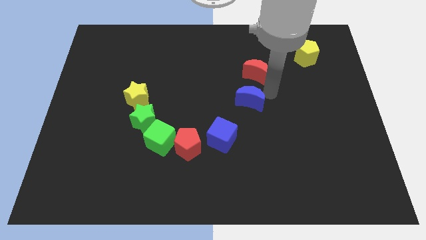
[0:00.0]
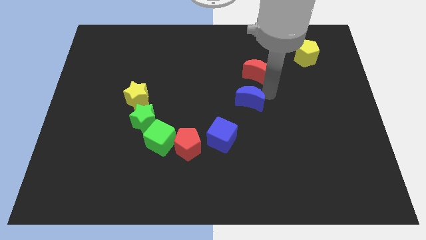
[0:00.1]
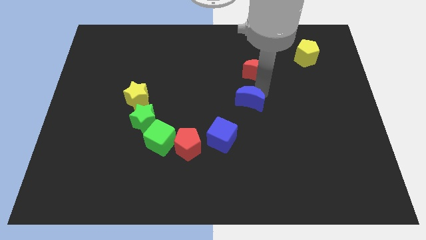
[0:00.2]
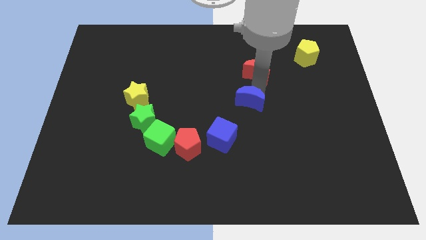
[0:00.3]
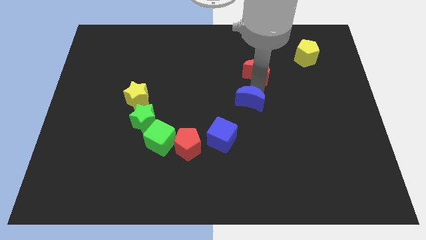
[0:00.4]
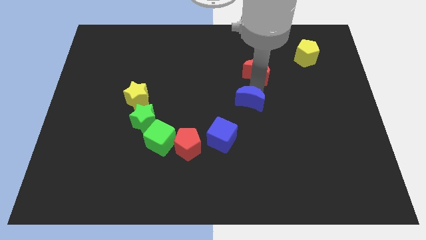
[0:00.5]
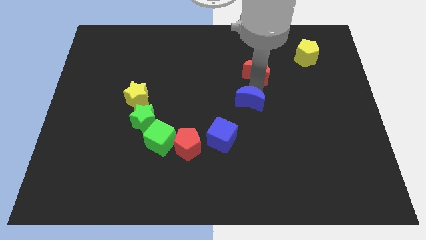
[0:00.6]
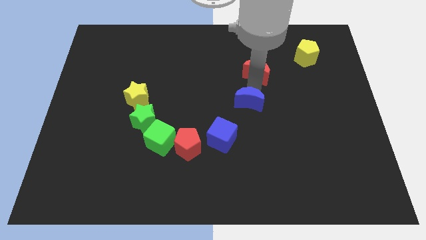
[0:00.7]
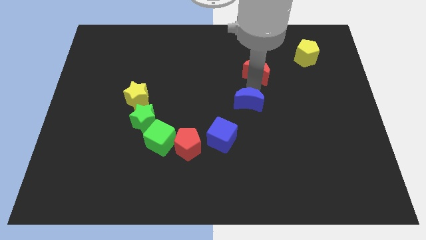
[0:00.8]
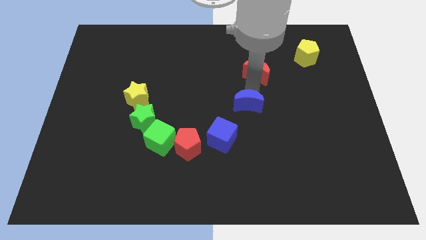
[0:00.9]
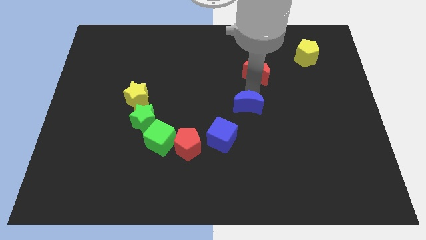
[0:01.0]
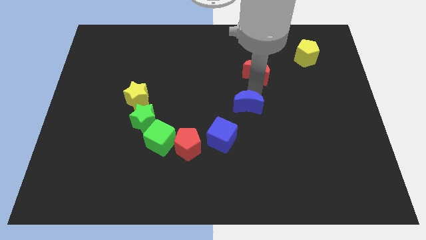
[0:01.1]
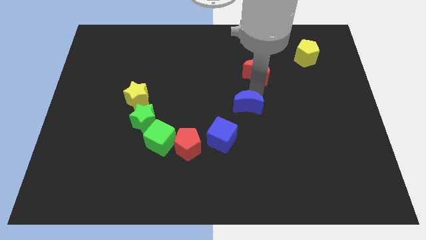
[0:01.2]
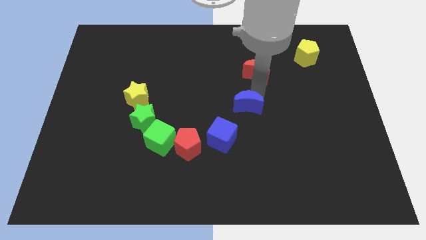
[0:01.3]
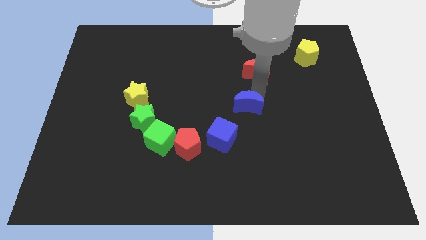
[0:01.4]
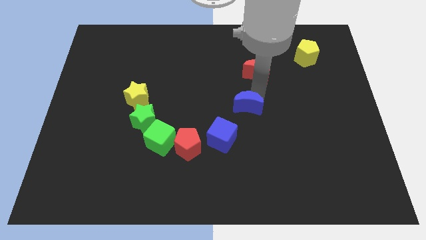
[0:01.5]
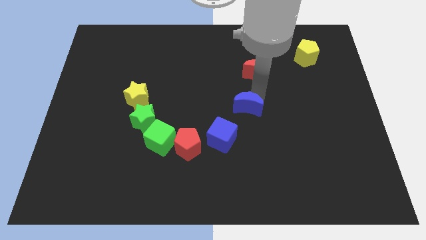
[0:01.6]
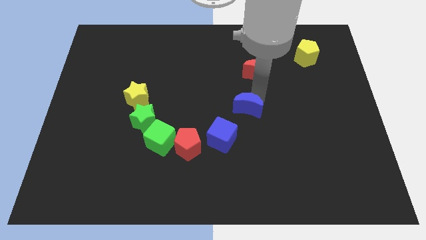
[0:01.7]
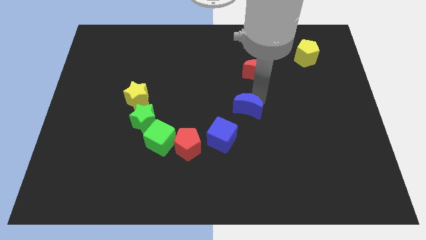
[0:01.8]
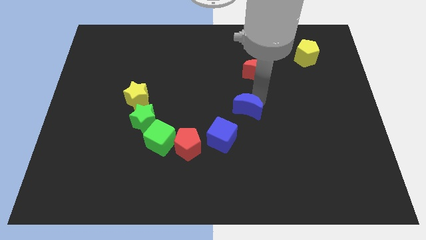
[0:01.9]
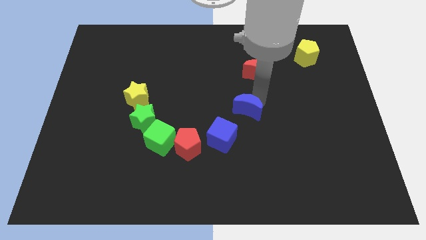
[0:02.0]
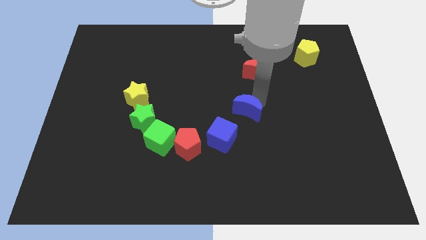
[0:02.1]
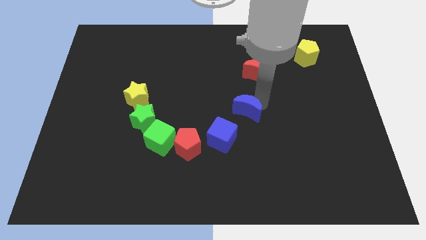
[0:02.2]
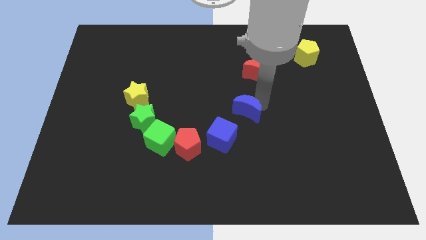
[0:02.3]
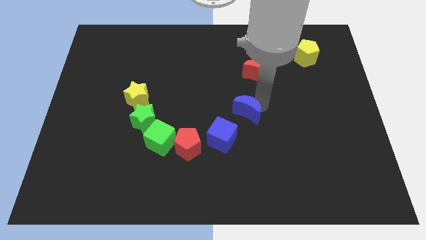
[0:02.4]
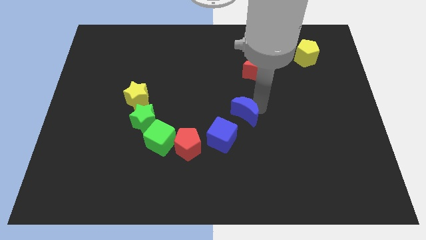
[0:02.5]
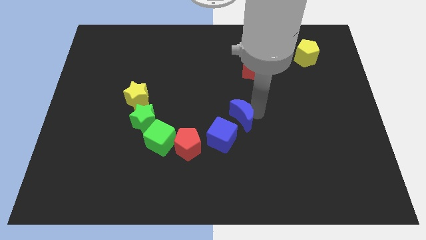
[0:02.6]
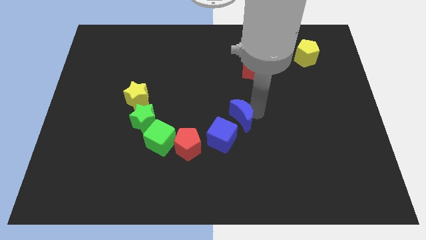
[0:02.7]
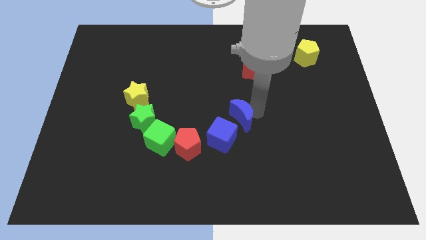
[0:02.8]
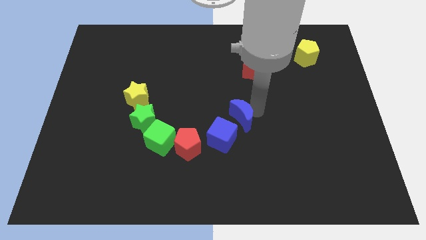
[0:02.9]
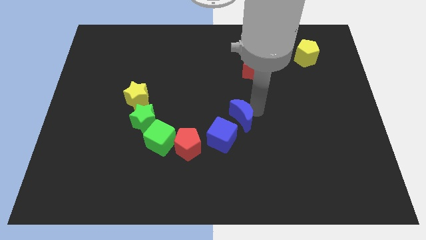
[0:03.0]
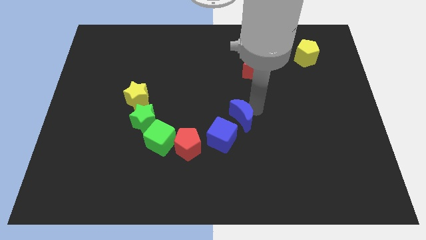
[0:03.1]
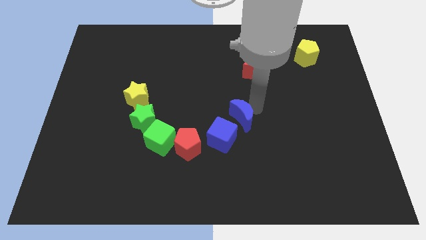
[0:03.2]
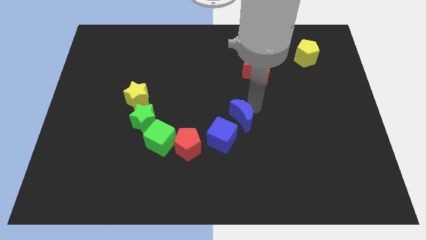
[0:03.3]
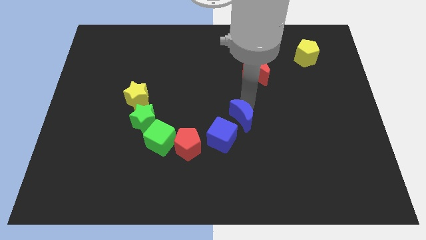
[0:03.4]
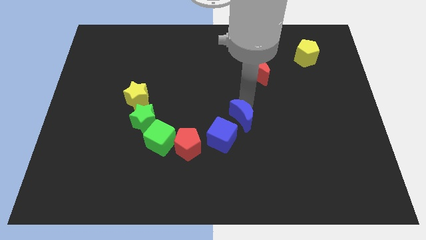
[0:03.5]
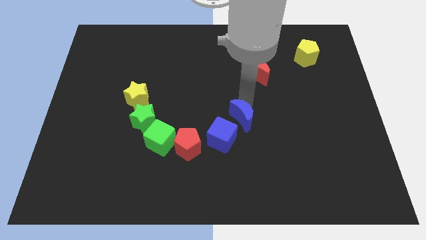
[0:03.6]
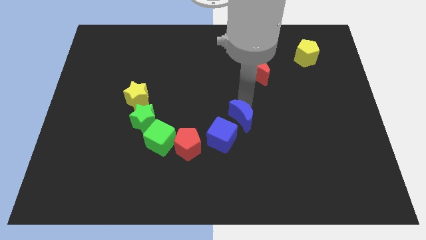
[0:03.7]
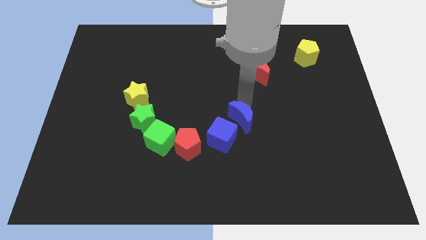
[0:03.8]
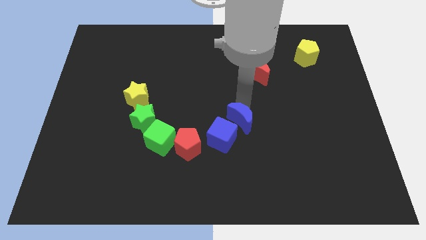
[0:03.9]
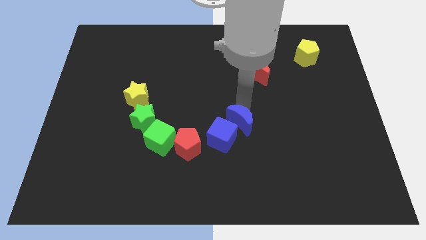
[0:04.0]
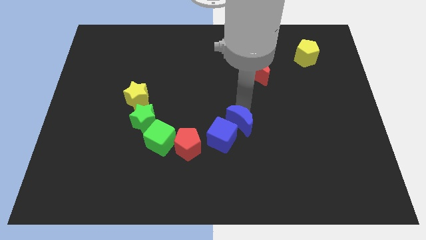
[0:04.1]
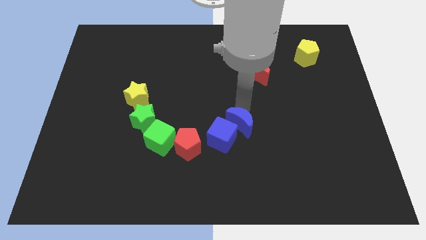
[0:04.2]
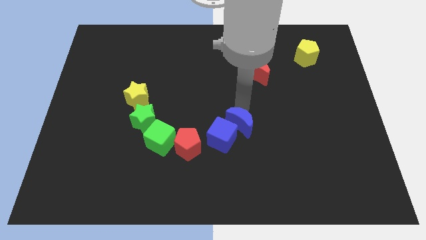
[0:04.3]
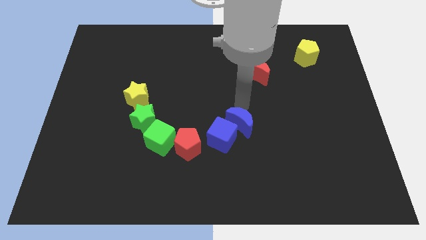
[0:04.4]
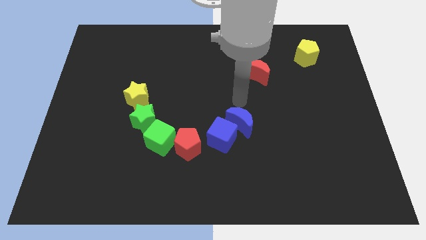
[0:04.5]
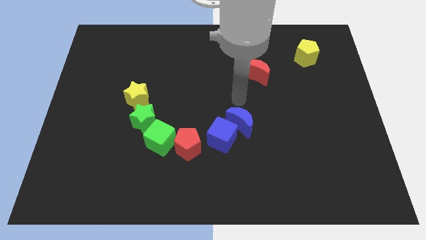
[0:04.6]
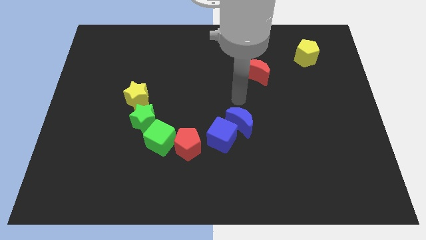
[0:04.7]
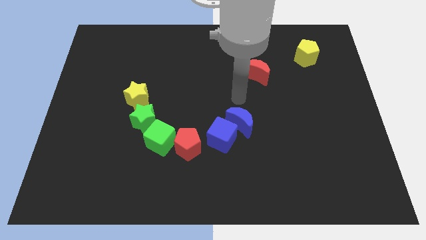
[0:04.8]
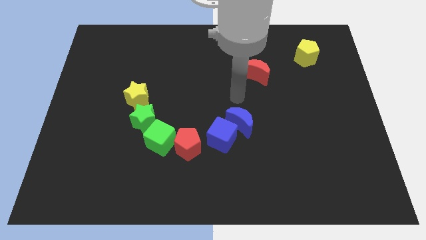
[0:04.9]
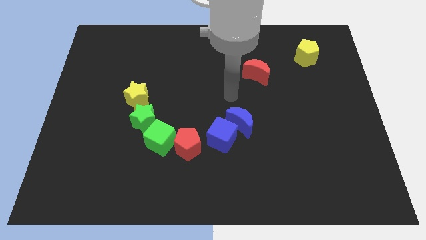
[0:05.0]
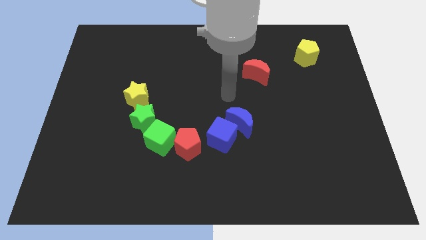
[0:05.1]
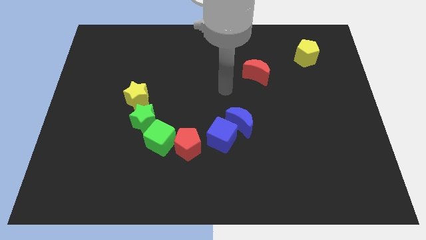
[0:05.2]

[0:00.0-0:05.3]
place the blue crescent to the top right of the blue cube

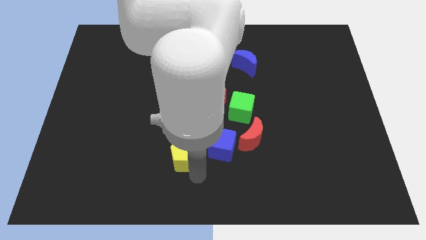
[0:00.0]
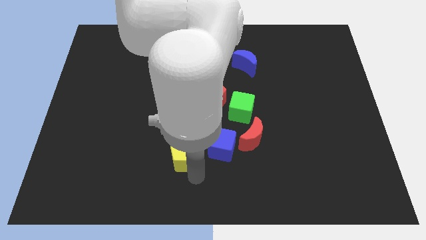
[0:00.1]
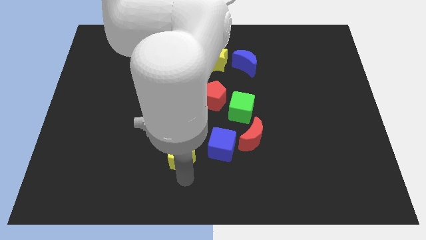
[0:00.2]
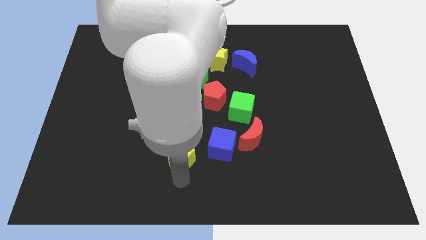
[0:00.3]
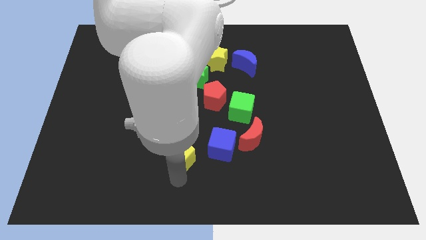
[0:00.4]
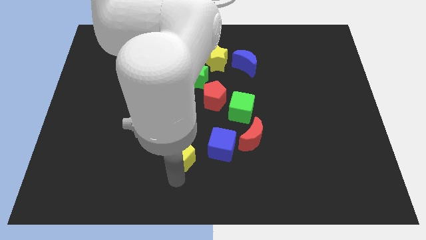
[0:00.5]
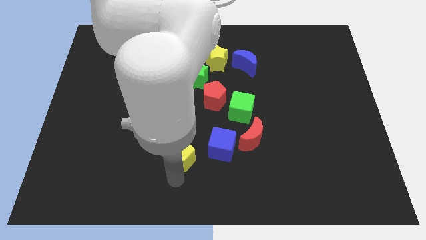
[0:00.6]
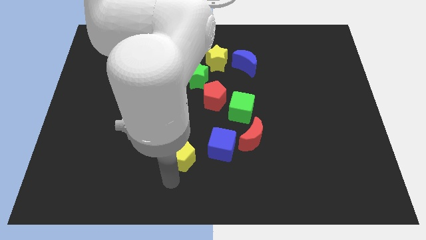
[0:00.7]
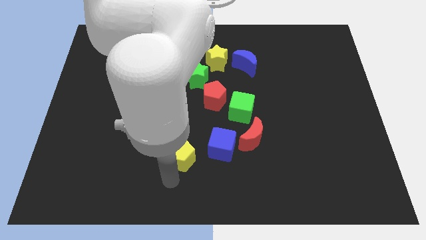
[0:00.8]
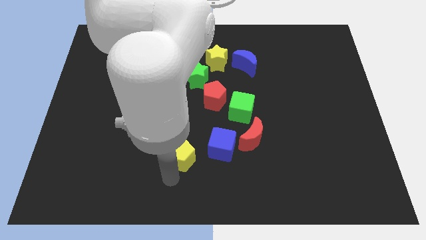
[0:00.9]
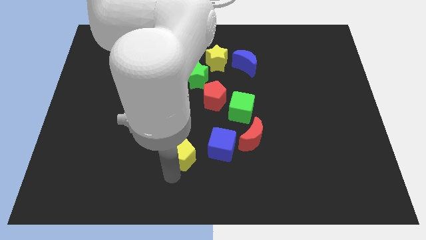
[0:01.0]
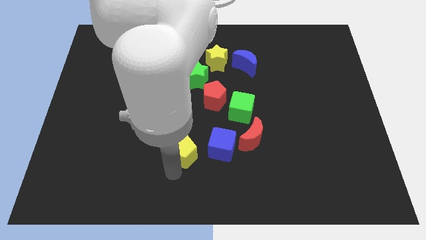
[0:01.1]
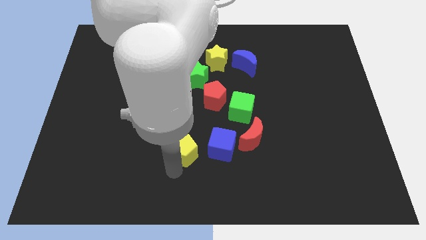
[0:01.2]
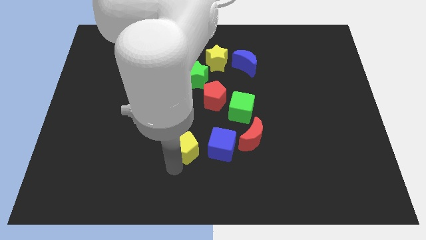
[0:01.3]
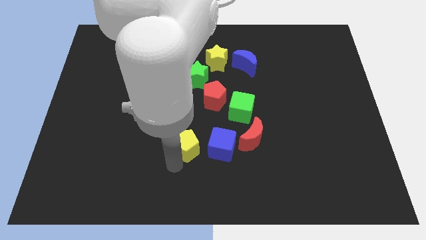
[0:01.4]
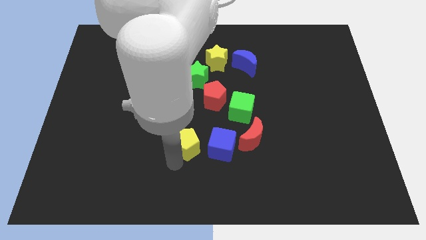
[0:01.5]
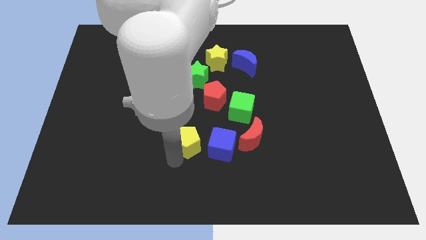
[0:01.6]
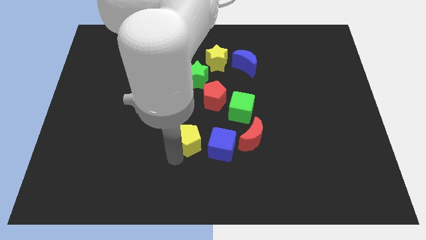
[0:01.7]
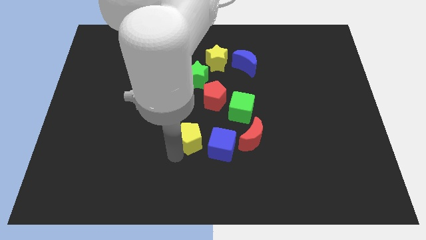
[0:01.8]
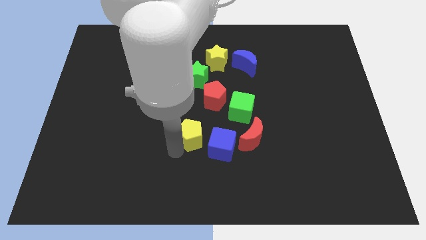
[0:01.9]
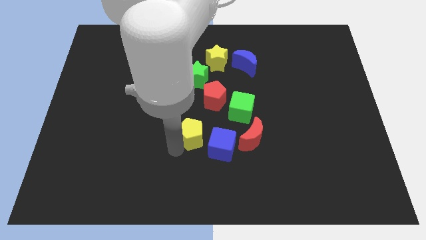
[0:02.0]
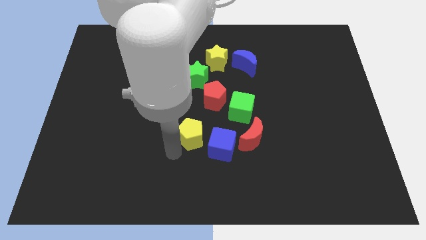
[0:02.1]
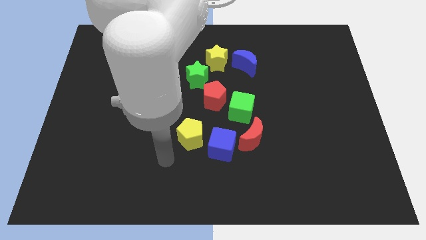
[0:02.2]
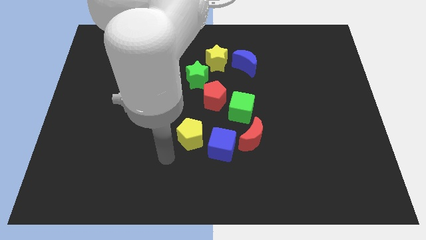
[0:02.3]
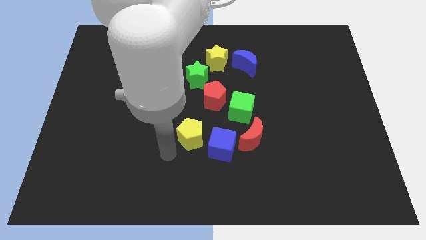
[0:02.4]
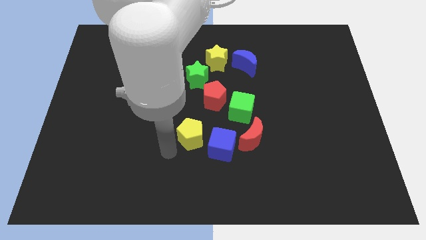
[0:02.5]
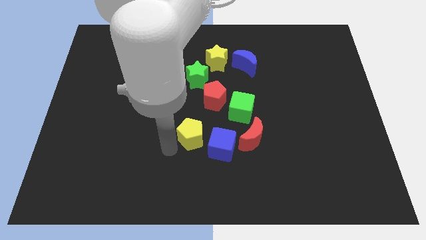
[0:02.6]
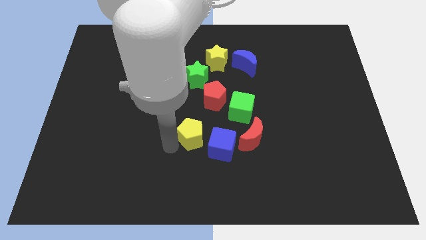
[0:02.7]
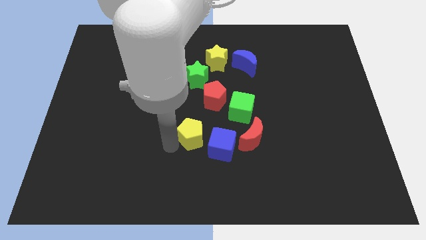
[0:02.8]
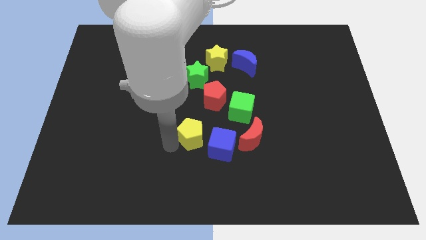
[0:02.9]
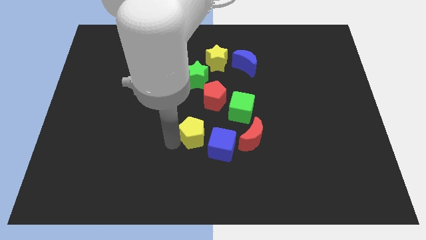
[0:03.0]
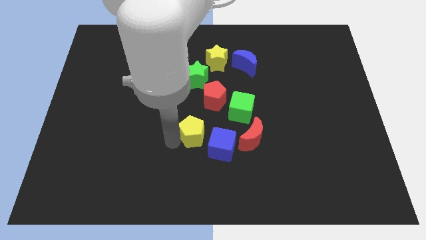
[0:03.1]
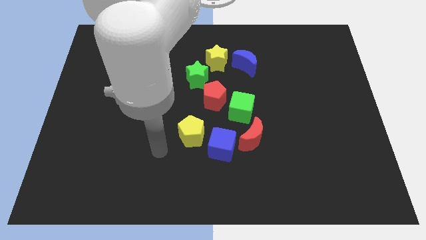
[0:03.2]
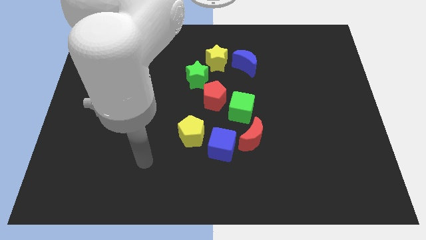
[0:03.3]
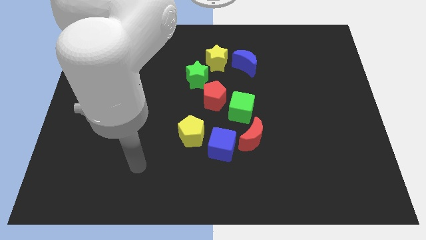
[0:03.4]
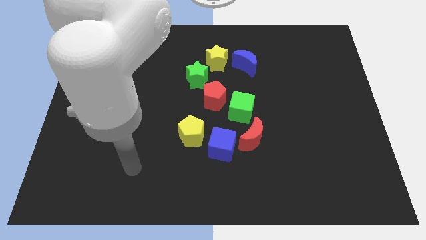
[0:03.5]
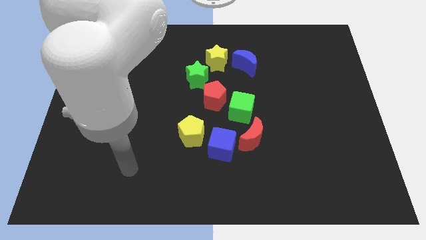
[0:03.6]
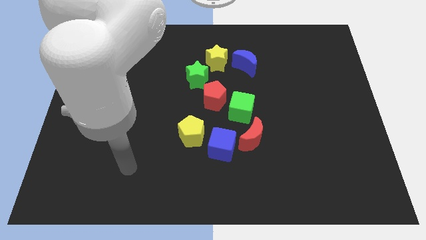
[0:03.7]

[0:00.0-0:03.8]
push yellow pentagon beside blue cube
